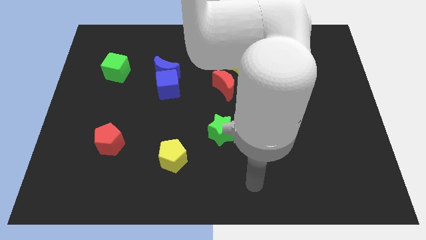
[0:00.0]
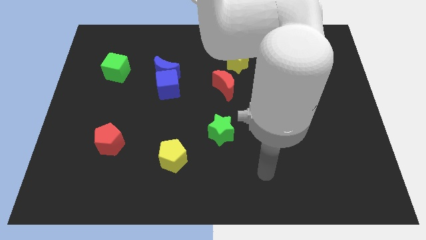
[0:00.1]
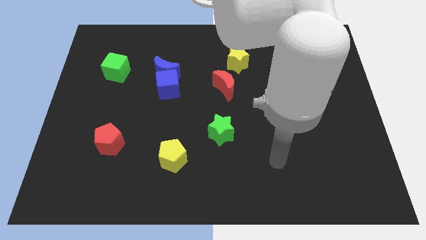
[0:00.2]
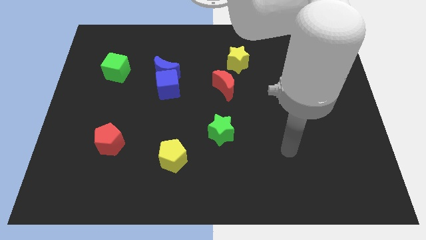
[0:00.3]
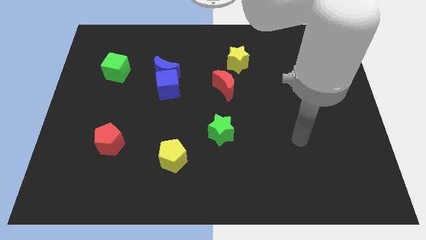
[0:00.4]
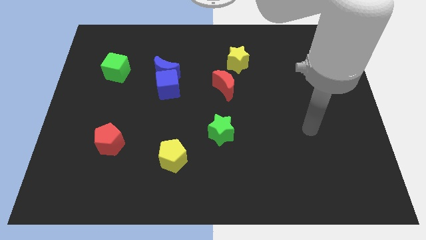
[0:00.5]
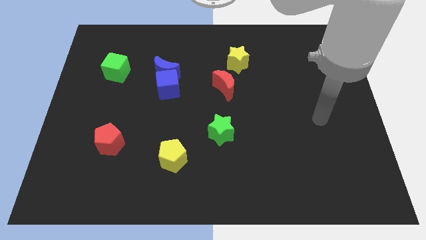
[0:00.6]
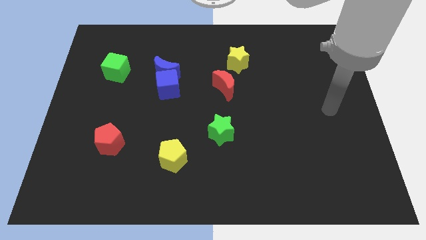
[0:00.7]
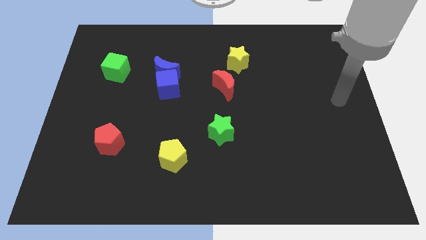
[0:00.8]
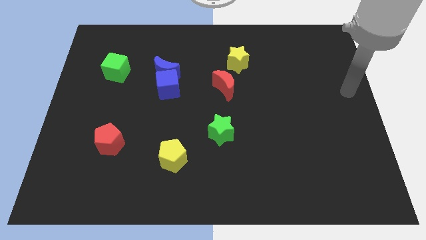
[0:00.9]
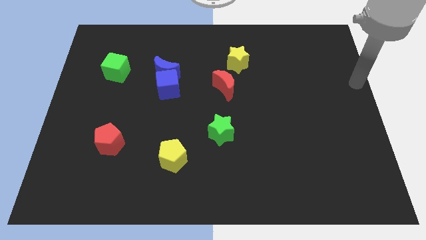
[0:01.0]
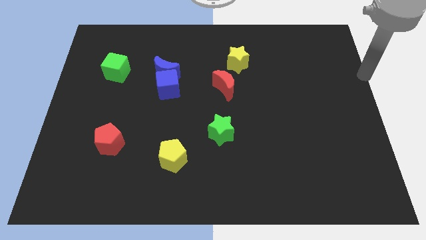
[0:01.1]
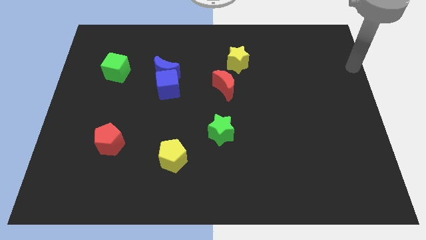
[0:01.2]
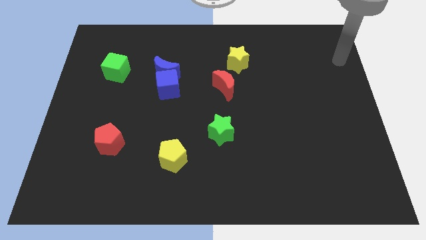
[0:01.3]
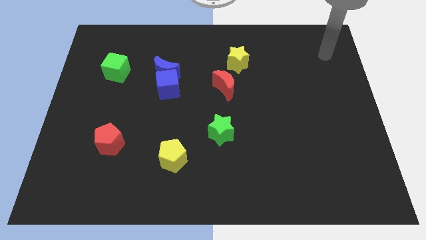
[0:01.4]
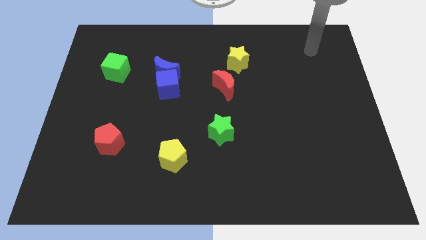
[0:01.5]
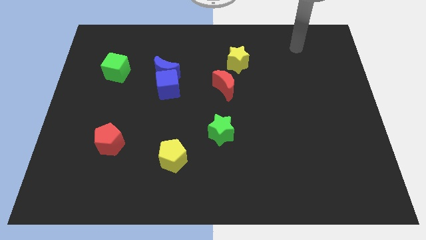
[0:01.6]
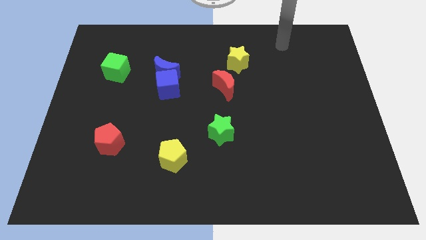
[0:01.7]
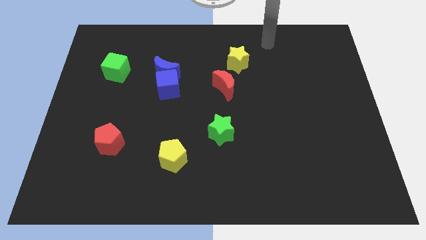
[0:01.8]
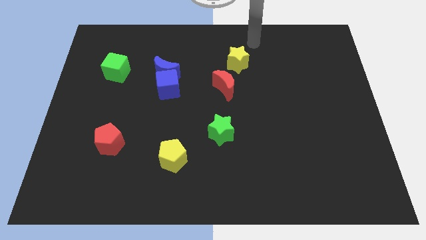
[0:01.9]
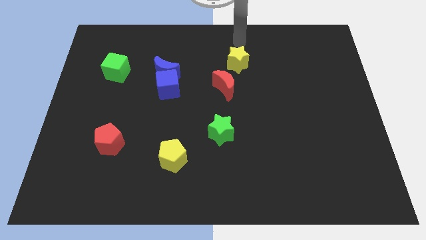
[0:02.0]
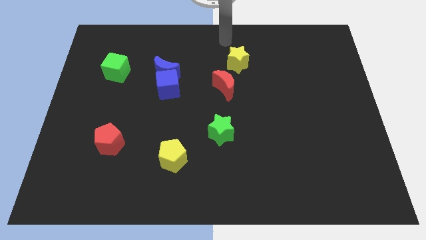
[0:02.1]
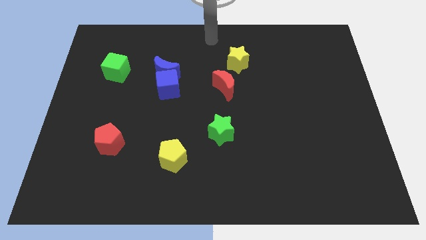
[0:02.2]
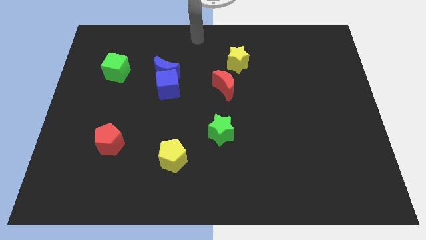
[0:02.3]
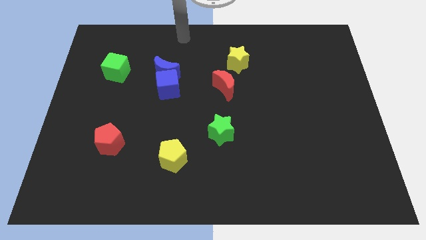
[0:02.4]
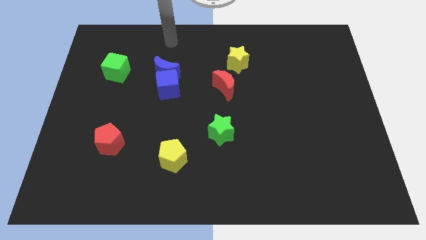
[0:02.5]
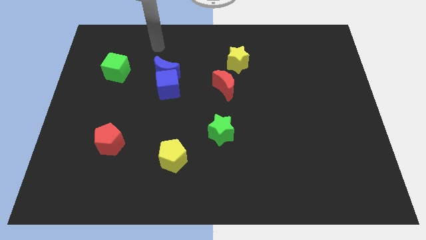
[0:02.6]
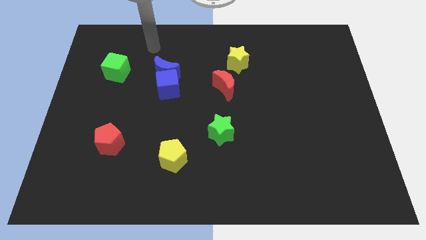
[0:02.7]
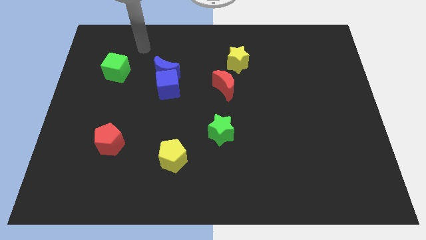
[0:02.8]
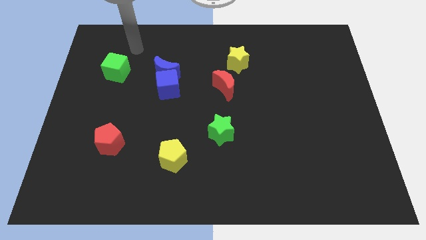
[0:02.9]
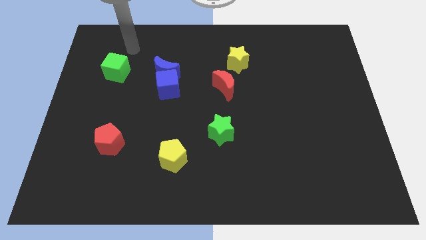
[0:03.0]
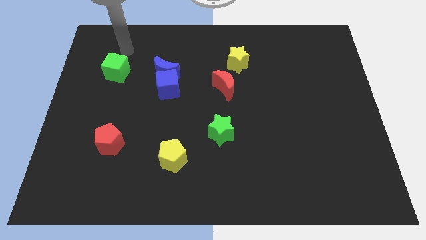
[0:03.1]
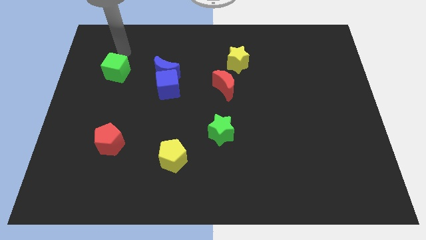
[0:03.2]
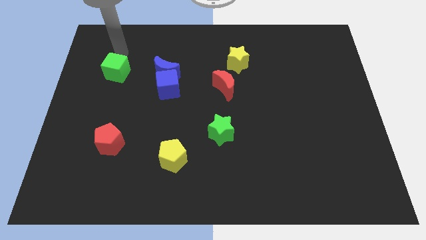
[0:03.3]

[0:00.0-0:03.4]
move your arm towards the green cube

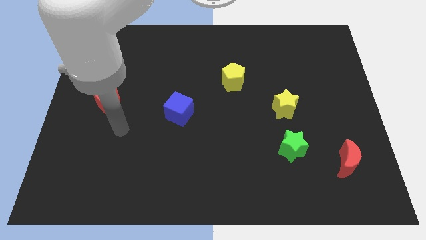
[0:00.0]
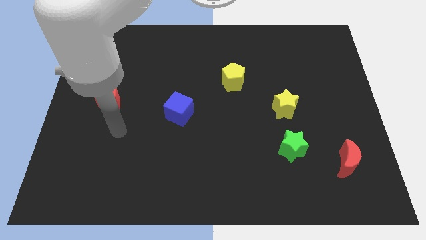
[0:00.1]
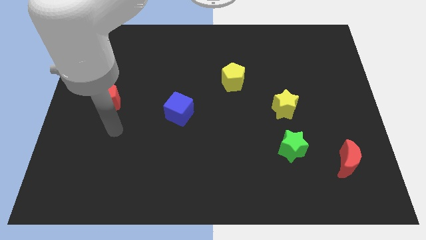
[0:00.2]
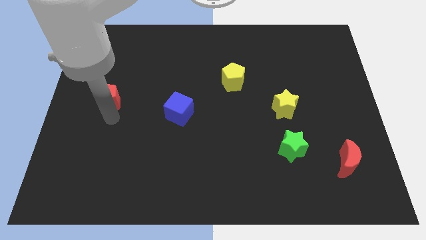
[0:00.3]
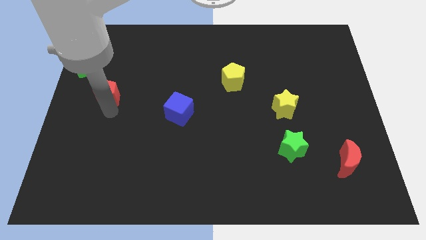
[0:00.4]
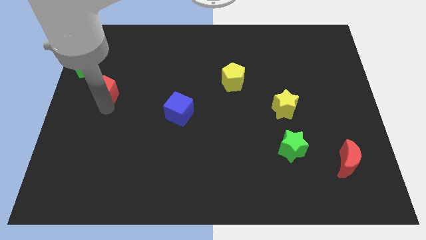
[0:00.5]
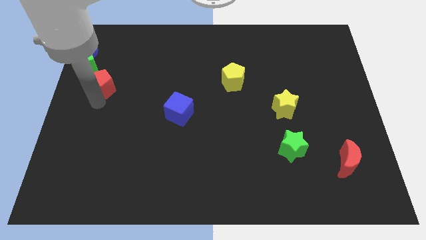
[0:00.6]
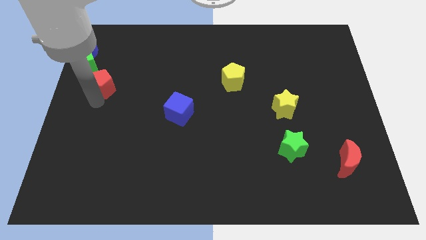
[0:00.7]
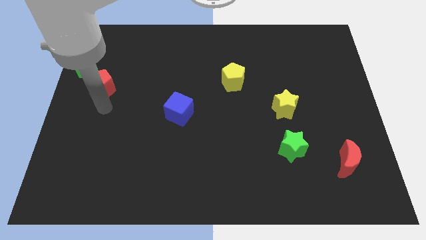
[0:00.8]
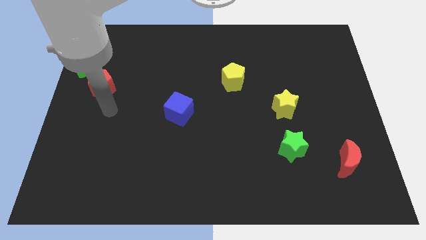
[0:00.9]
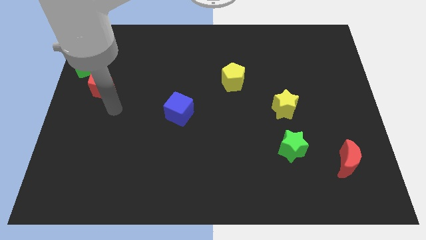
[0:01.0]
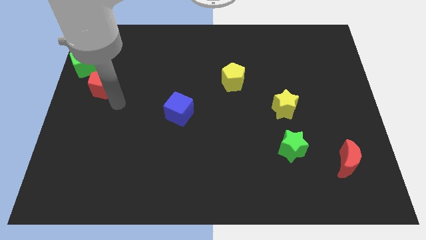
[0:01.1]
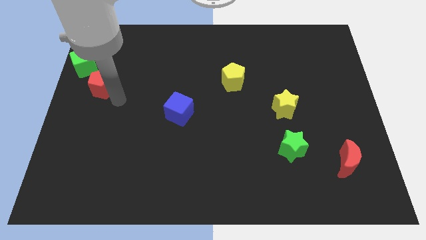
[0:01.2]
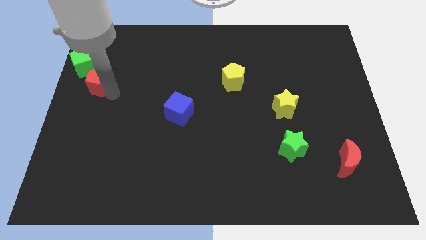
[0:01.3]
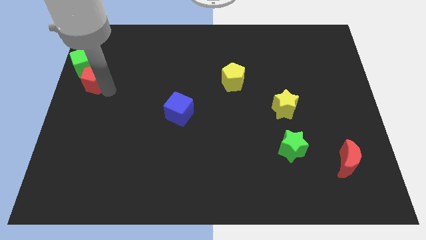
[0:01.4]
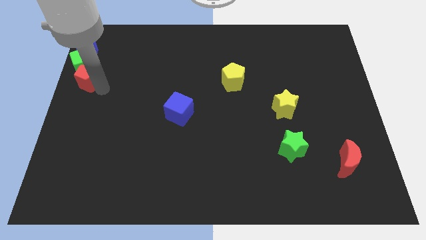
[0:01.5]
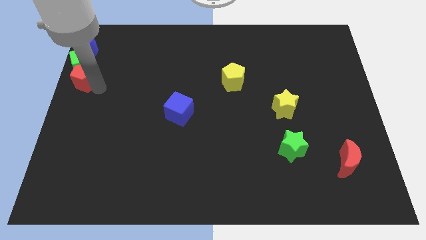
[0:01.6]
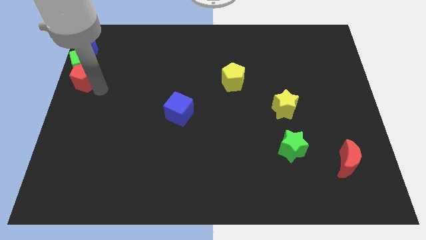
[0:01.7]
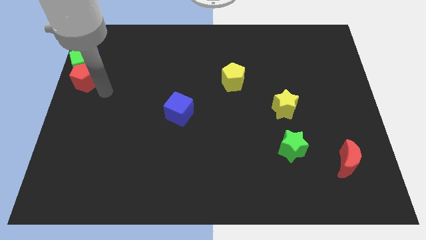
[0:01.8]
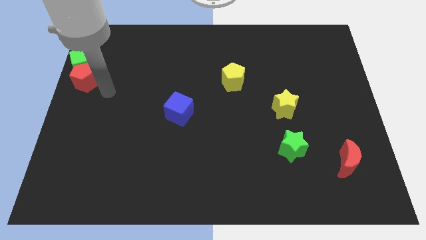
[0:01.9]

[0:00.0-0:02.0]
push red pentagon into the green cube

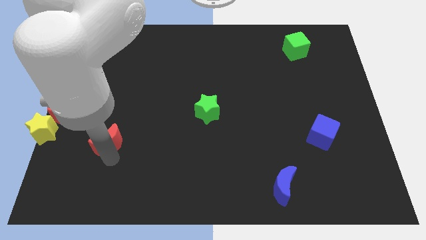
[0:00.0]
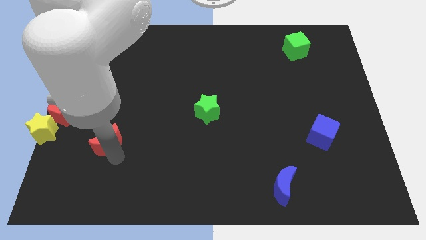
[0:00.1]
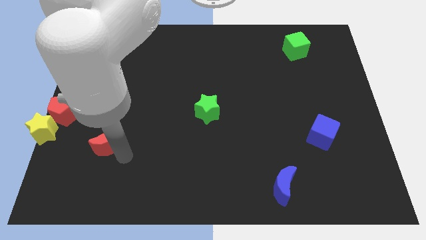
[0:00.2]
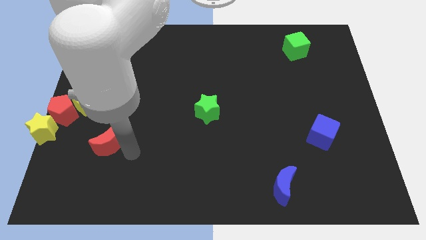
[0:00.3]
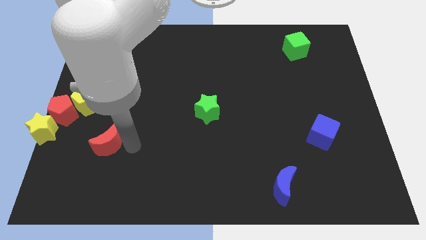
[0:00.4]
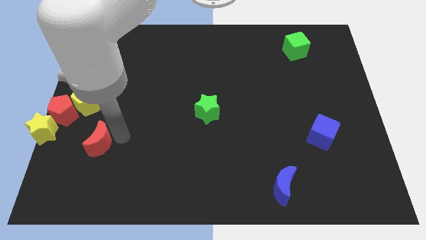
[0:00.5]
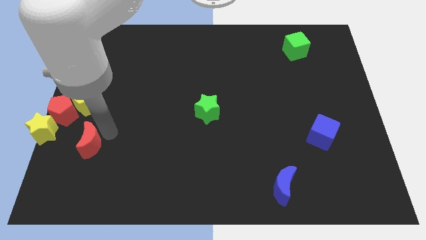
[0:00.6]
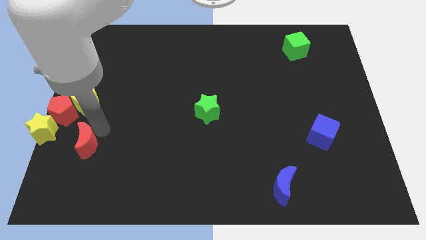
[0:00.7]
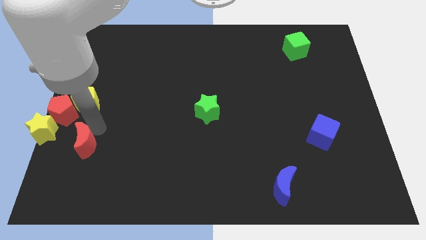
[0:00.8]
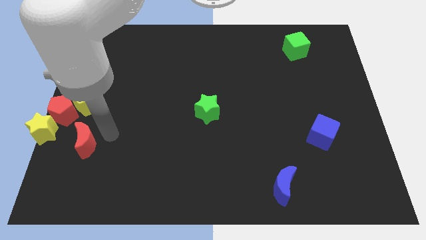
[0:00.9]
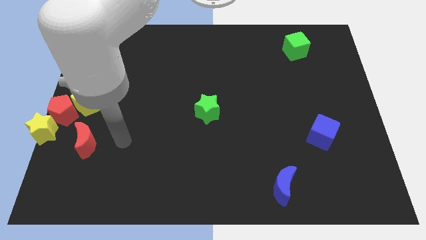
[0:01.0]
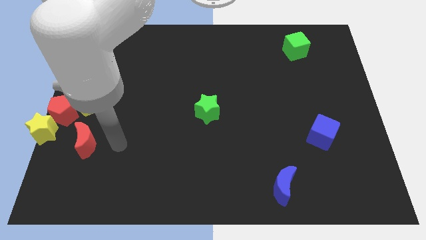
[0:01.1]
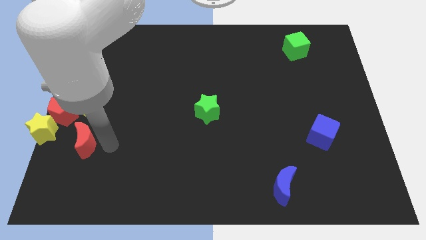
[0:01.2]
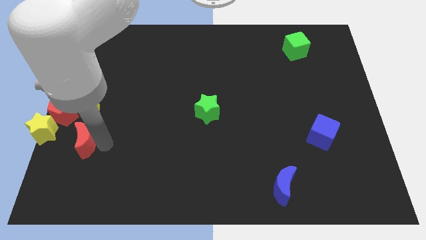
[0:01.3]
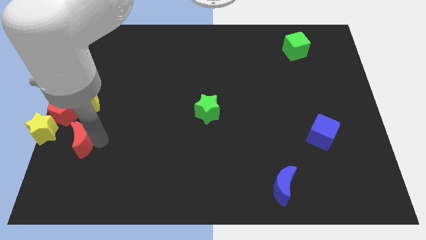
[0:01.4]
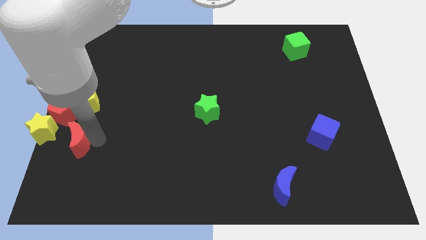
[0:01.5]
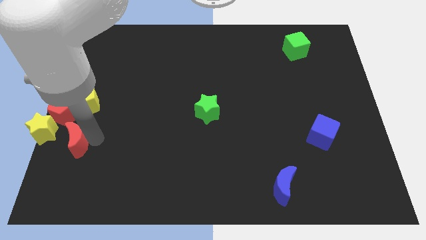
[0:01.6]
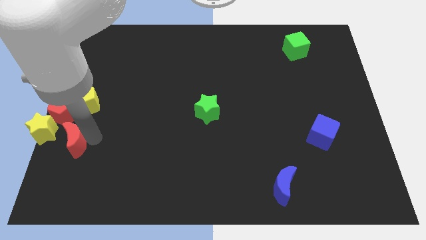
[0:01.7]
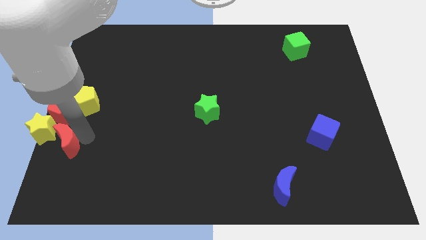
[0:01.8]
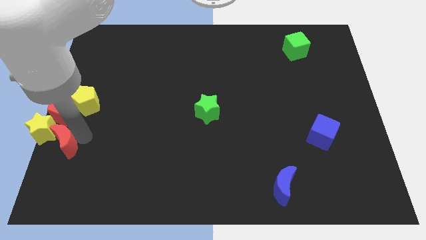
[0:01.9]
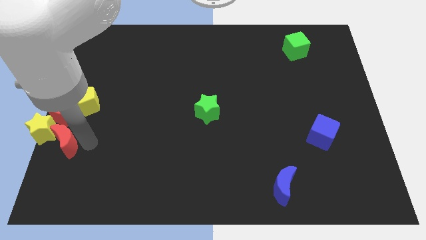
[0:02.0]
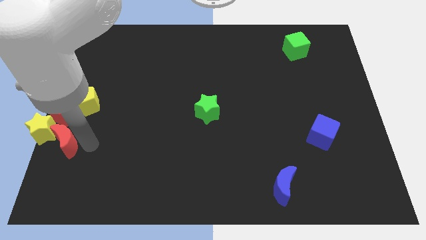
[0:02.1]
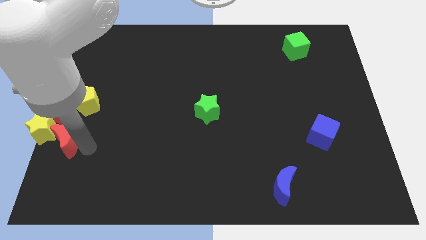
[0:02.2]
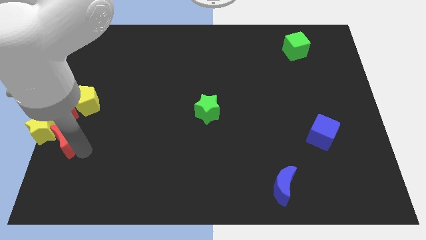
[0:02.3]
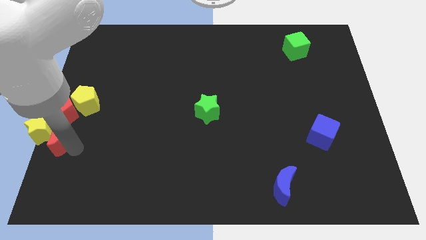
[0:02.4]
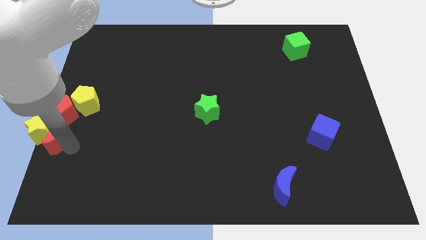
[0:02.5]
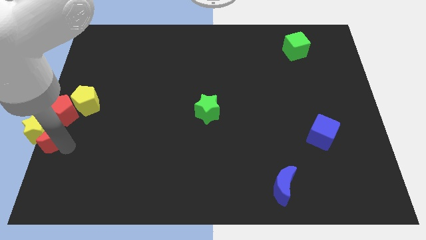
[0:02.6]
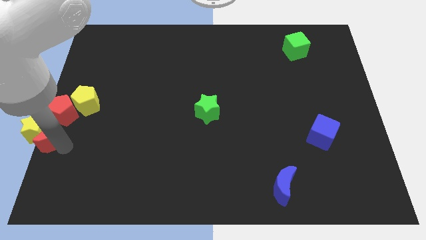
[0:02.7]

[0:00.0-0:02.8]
push the red moon into yellow star

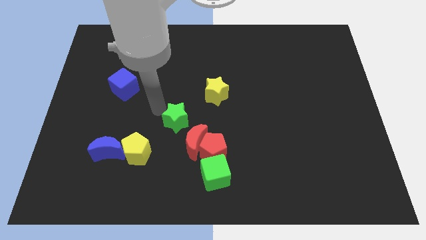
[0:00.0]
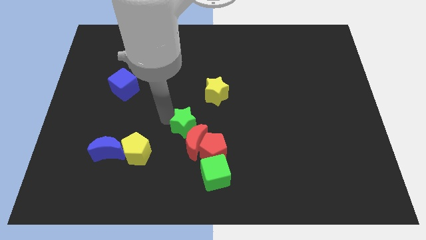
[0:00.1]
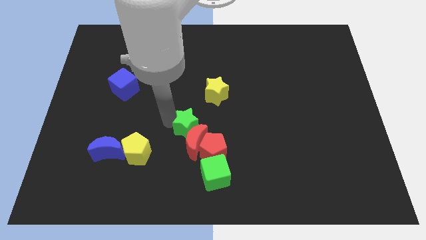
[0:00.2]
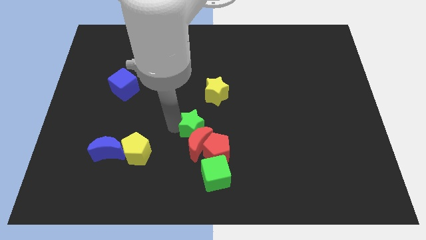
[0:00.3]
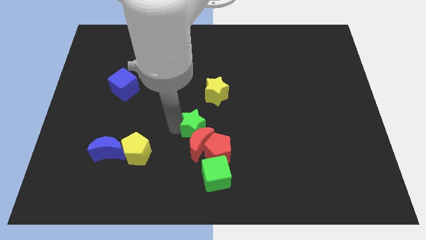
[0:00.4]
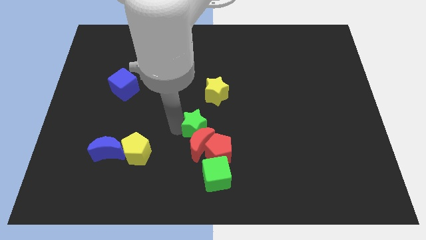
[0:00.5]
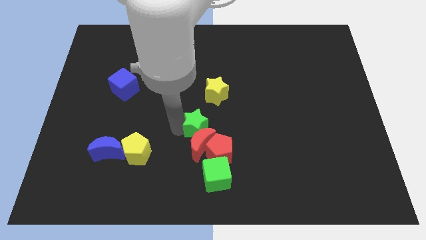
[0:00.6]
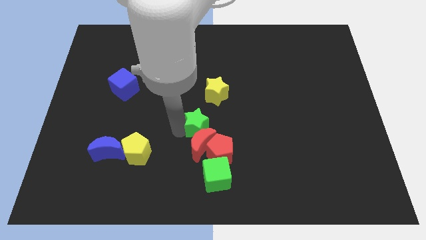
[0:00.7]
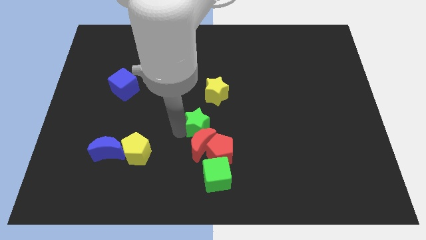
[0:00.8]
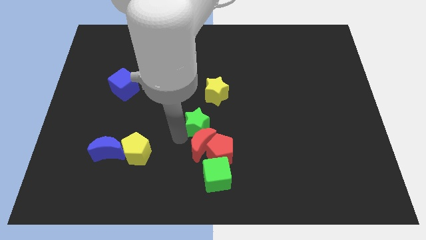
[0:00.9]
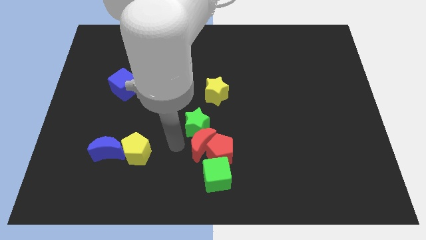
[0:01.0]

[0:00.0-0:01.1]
move green star above red moon
